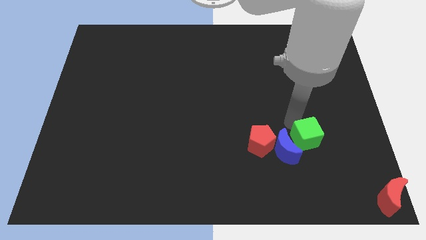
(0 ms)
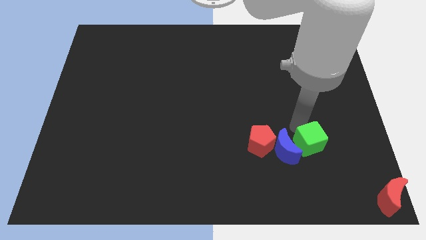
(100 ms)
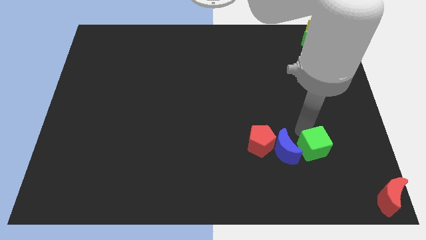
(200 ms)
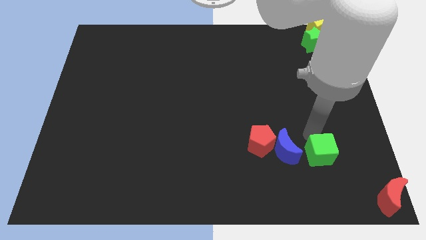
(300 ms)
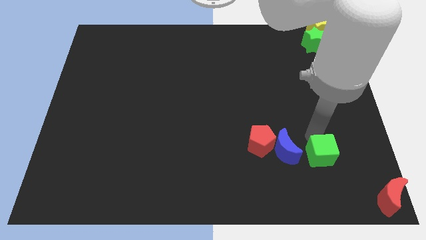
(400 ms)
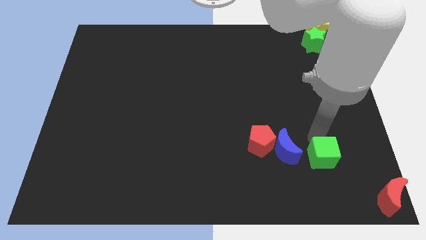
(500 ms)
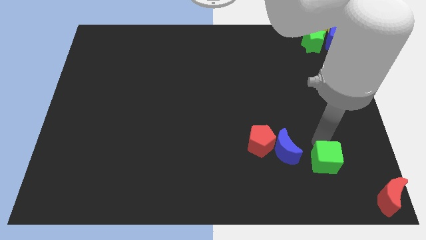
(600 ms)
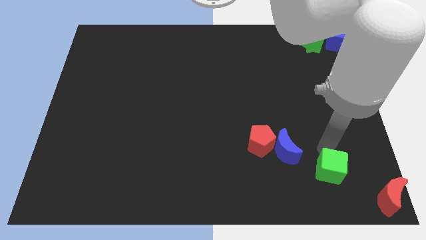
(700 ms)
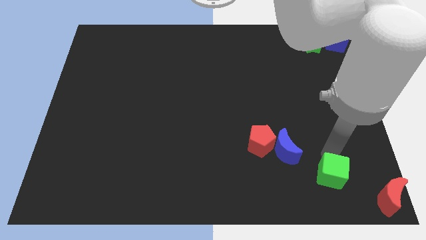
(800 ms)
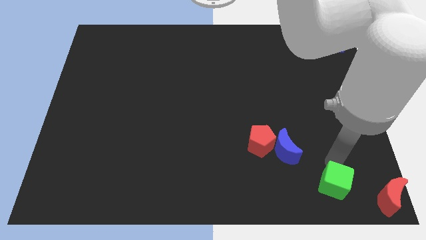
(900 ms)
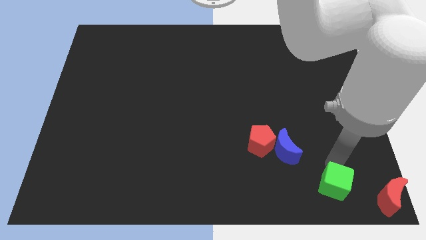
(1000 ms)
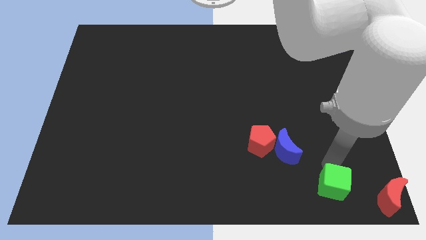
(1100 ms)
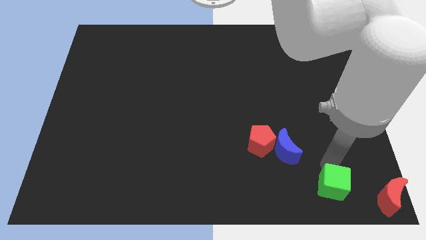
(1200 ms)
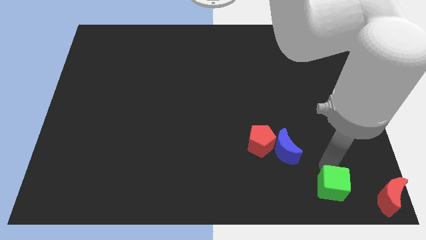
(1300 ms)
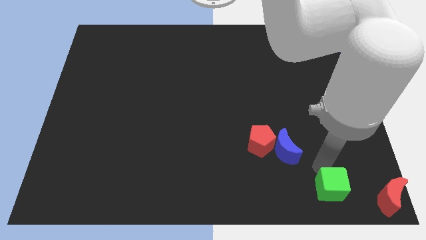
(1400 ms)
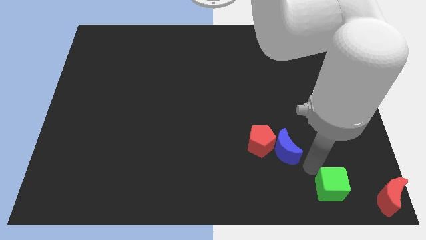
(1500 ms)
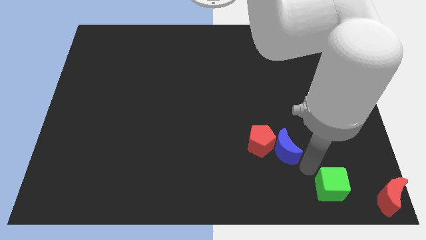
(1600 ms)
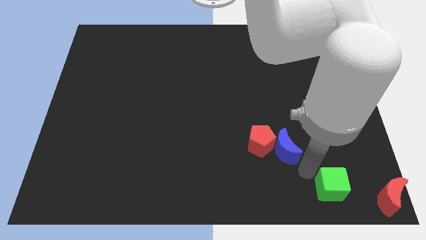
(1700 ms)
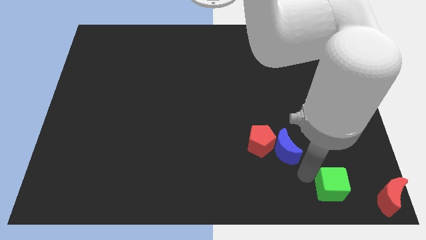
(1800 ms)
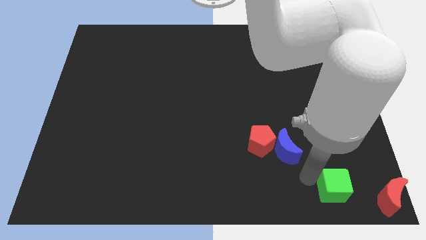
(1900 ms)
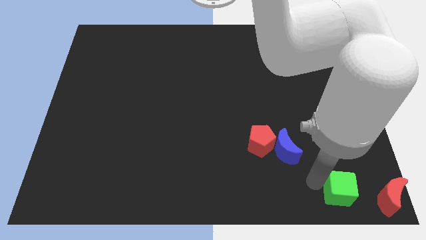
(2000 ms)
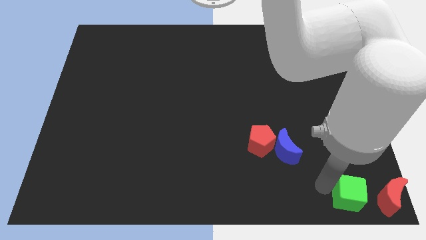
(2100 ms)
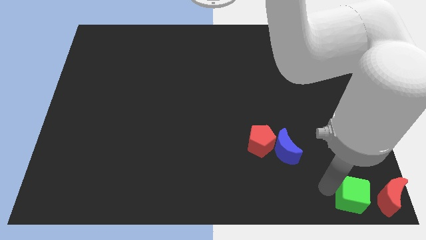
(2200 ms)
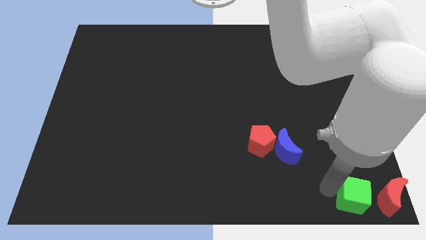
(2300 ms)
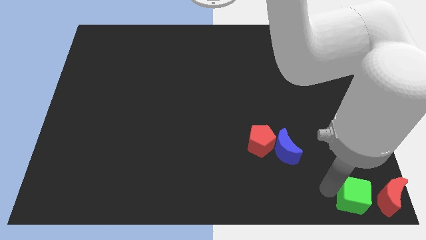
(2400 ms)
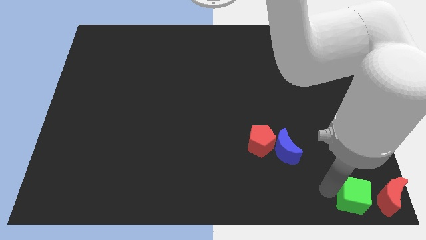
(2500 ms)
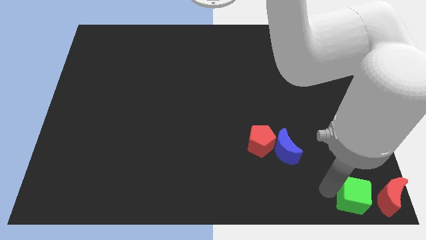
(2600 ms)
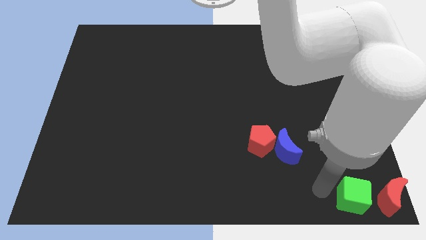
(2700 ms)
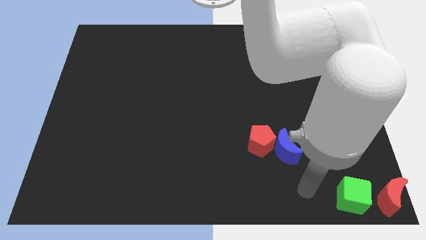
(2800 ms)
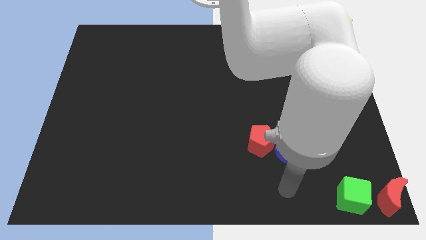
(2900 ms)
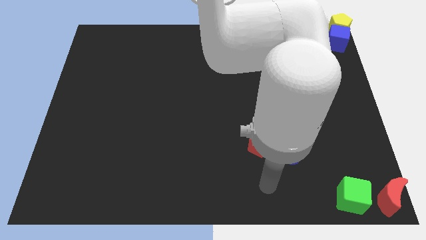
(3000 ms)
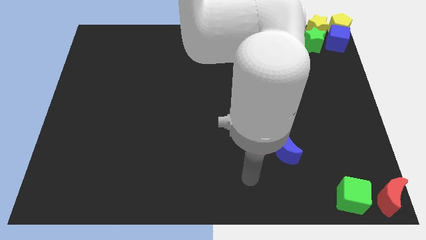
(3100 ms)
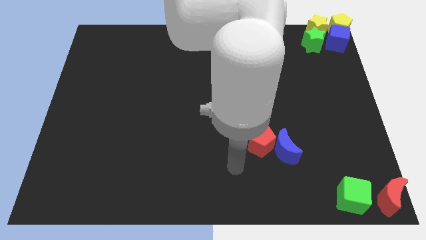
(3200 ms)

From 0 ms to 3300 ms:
move green cube towards red moon

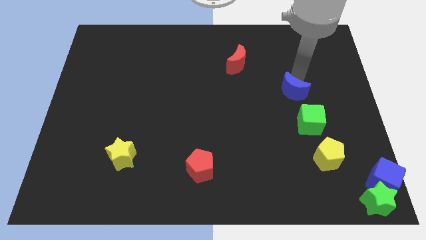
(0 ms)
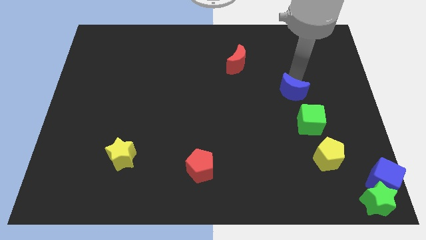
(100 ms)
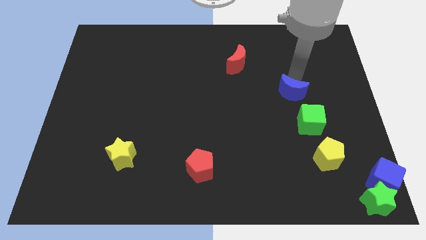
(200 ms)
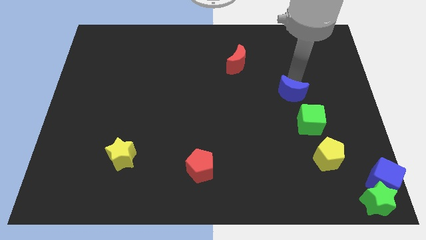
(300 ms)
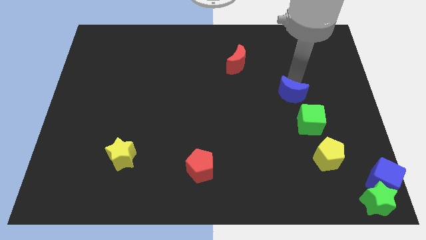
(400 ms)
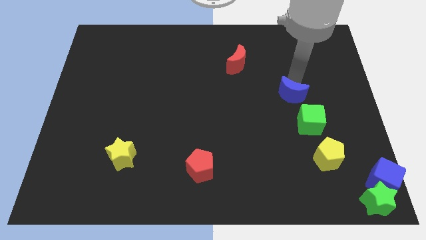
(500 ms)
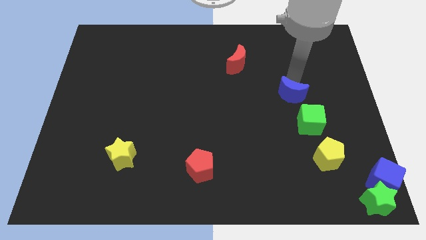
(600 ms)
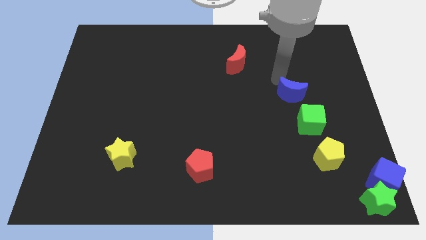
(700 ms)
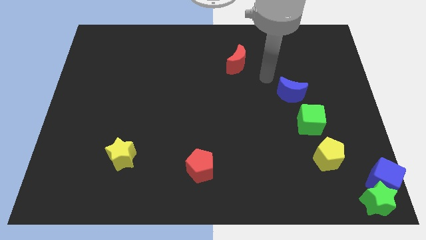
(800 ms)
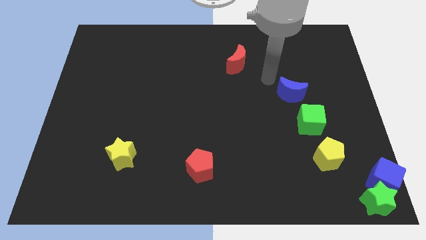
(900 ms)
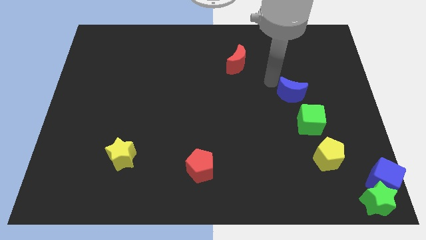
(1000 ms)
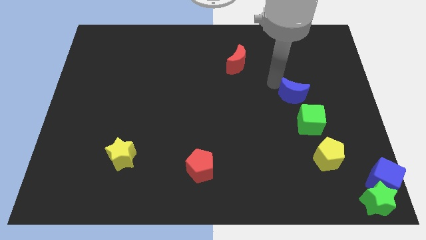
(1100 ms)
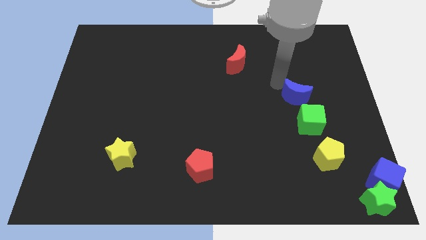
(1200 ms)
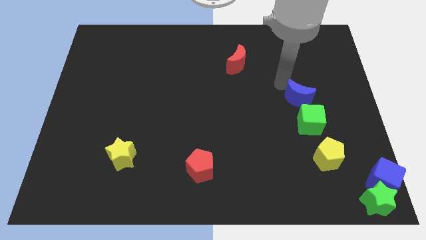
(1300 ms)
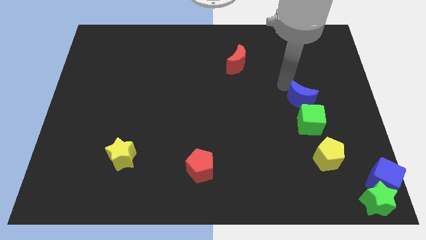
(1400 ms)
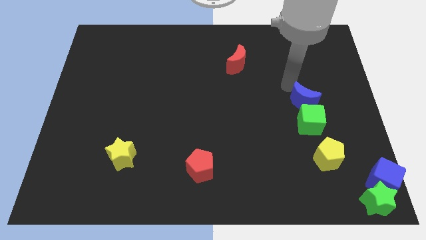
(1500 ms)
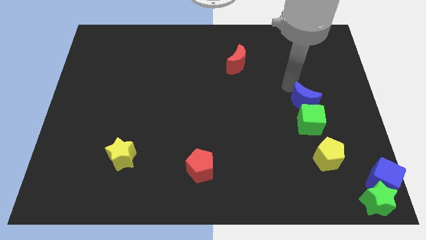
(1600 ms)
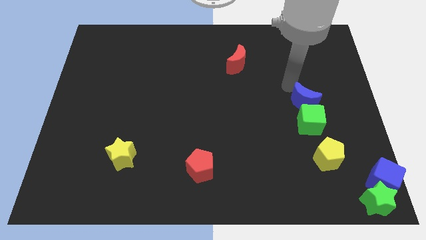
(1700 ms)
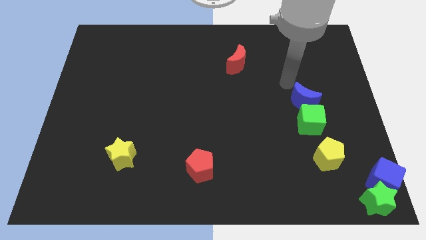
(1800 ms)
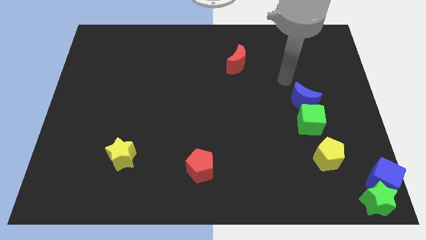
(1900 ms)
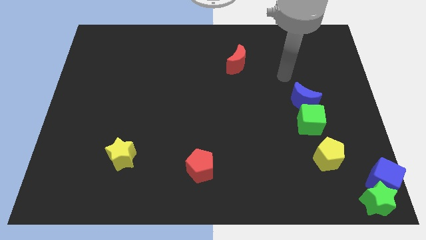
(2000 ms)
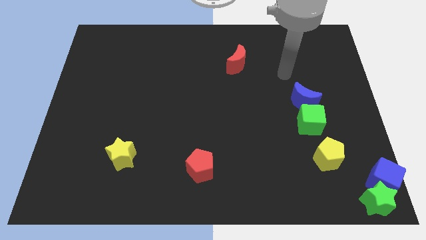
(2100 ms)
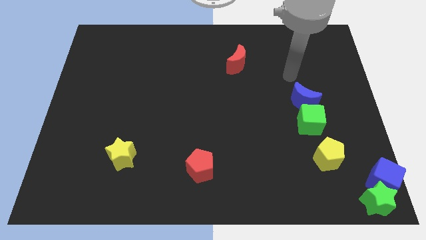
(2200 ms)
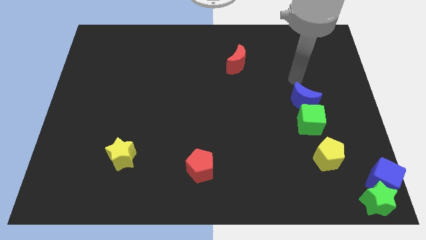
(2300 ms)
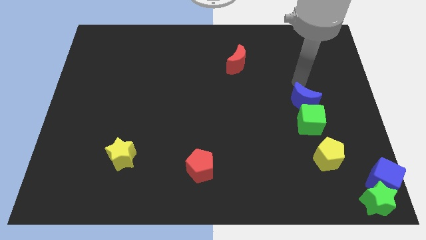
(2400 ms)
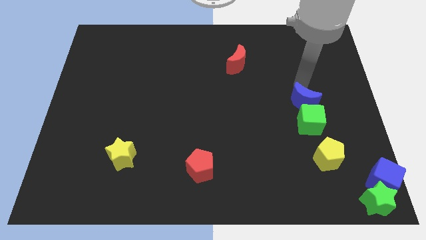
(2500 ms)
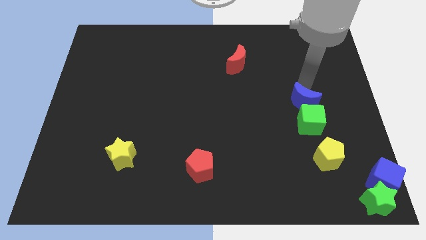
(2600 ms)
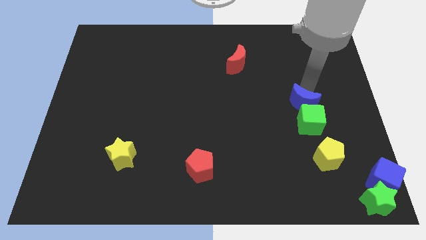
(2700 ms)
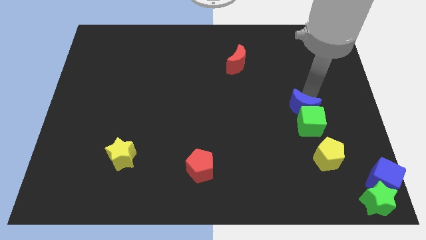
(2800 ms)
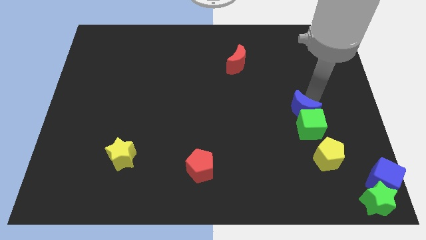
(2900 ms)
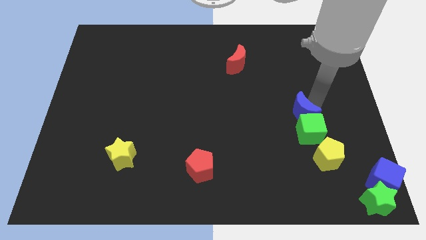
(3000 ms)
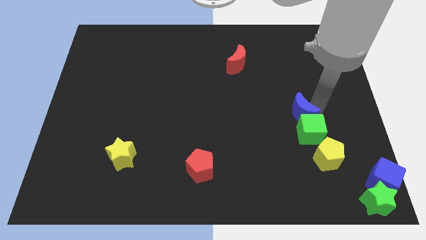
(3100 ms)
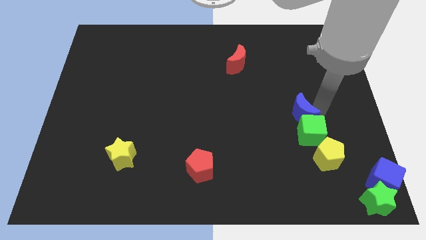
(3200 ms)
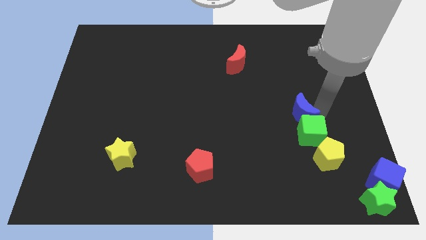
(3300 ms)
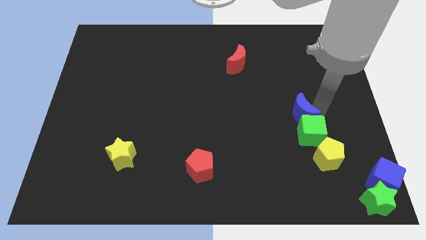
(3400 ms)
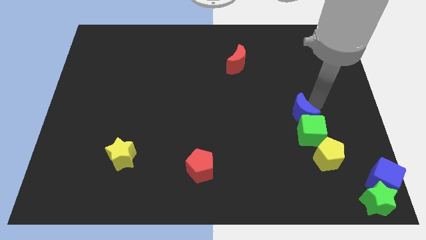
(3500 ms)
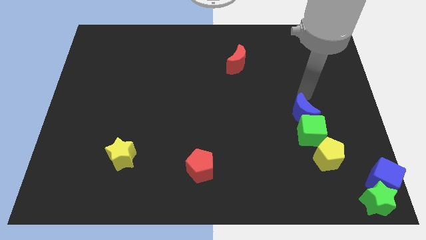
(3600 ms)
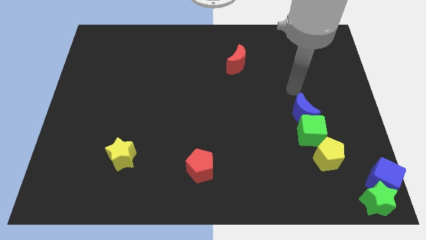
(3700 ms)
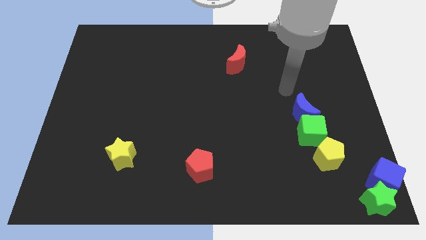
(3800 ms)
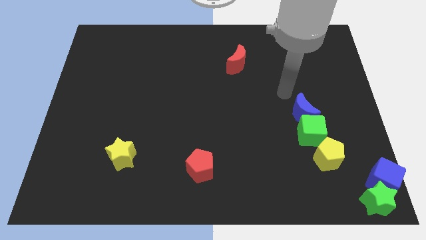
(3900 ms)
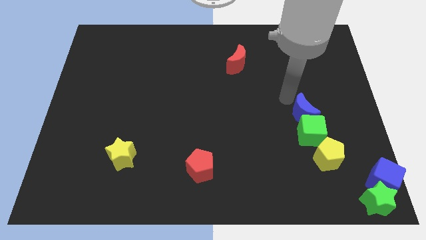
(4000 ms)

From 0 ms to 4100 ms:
place blue moon on top of green cube

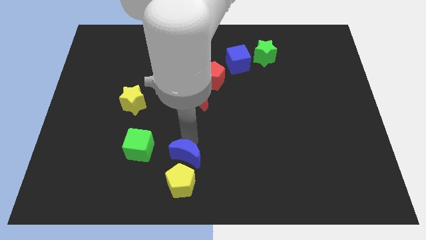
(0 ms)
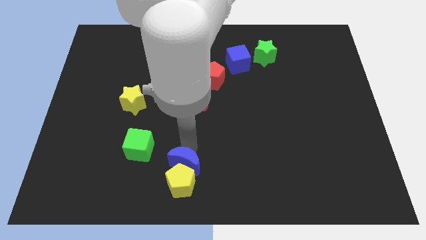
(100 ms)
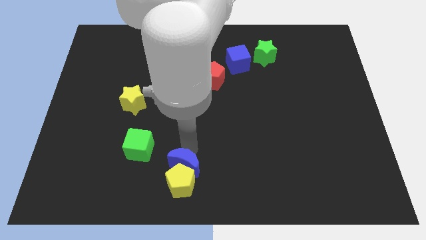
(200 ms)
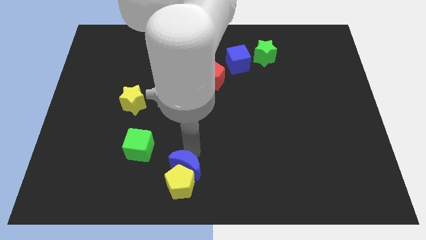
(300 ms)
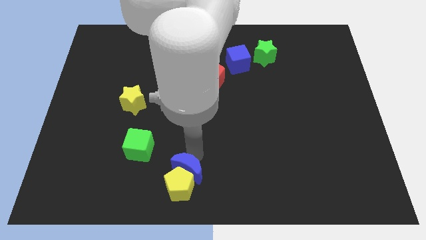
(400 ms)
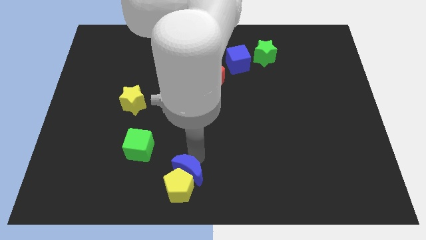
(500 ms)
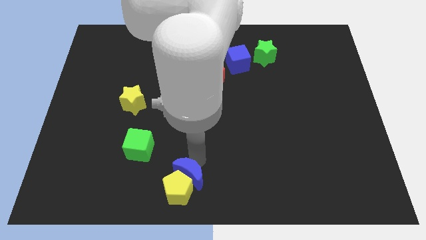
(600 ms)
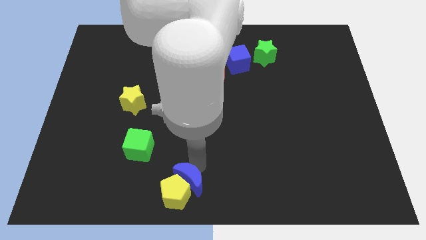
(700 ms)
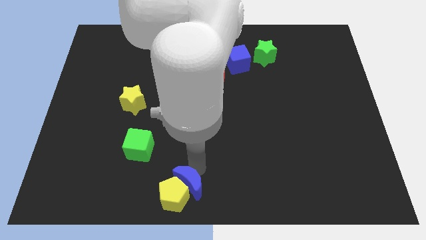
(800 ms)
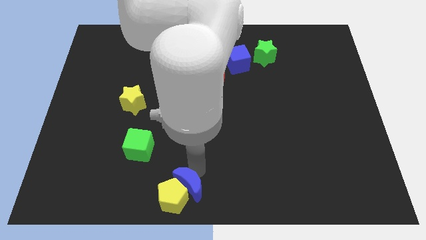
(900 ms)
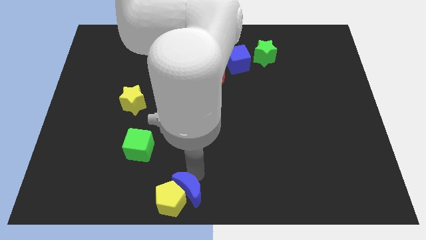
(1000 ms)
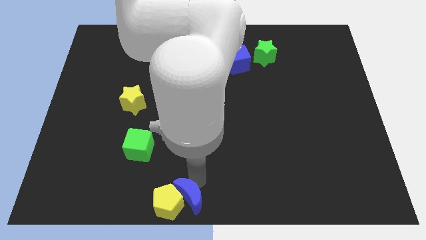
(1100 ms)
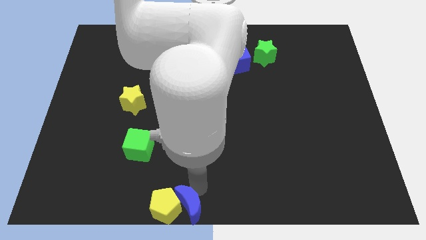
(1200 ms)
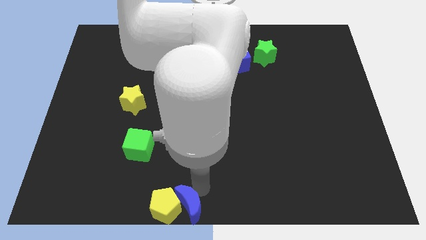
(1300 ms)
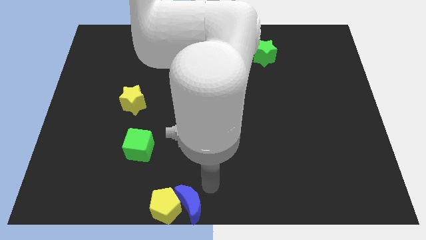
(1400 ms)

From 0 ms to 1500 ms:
move the blue crescent along with yellow pentagon towards the bottom center
